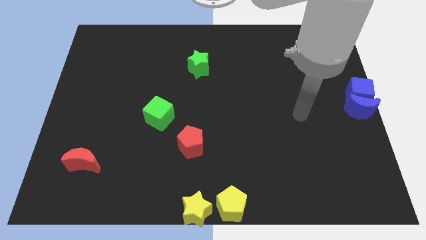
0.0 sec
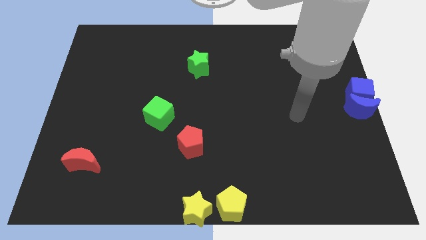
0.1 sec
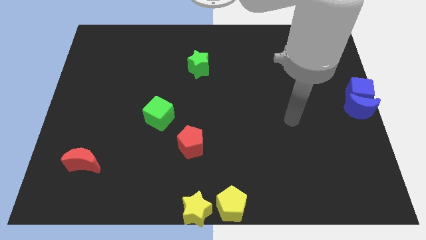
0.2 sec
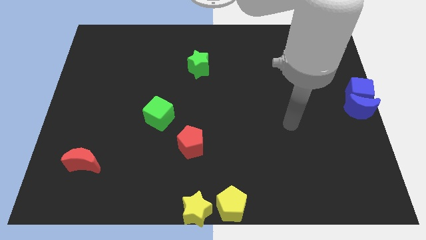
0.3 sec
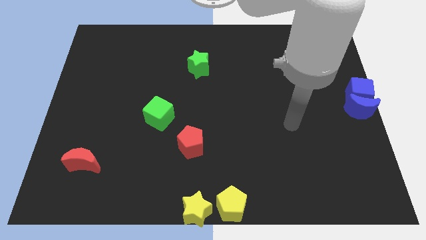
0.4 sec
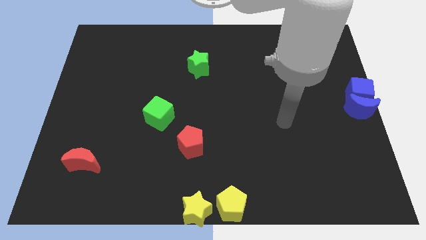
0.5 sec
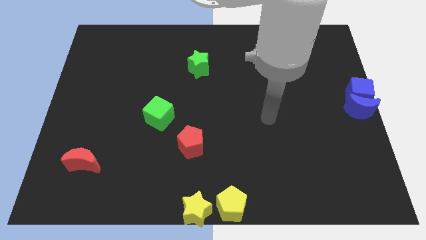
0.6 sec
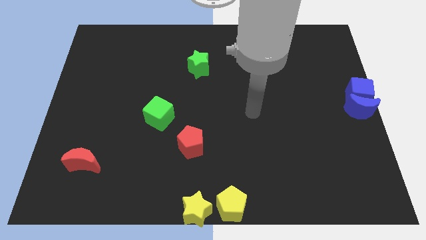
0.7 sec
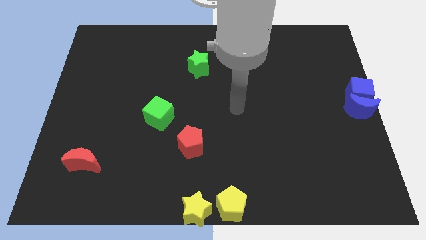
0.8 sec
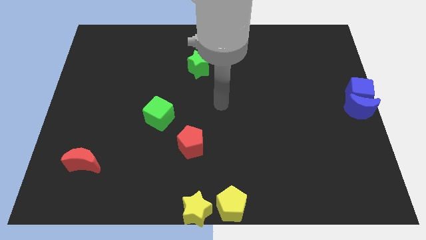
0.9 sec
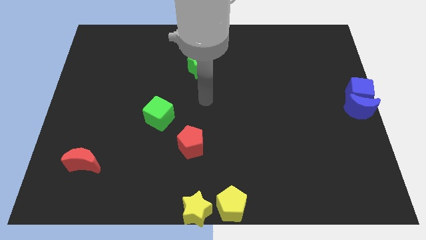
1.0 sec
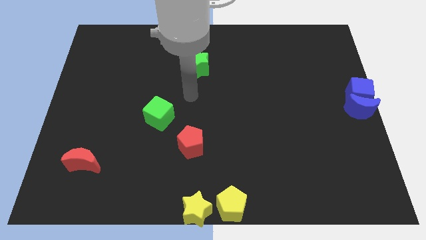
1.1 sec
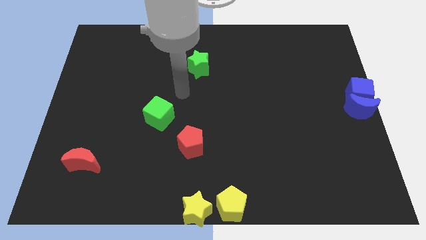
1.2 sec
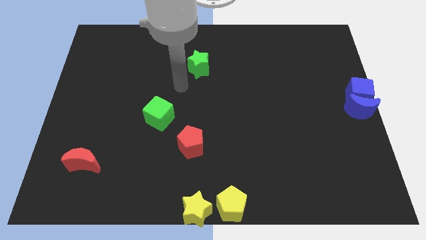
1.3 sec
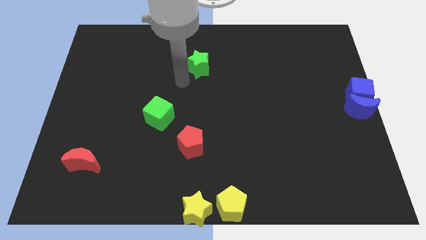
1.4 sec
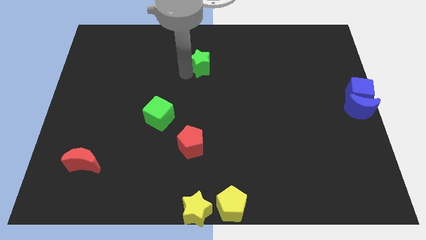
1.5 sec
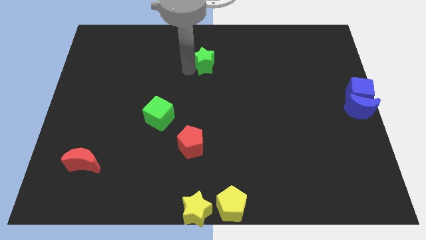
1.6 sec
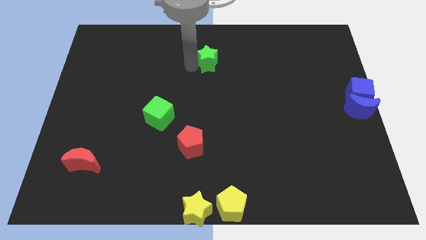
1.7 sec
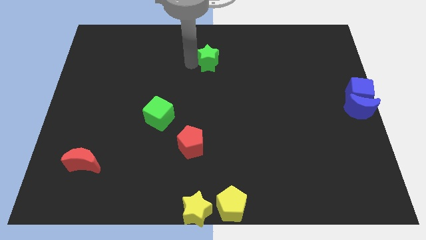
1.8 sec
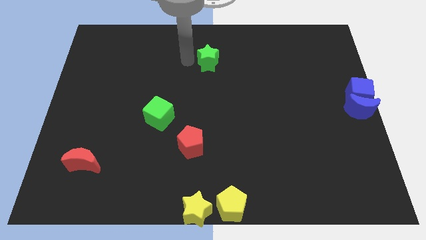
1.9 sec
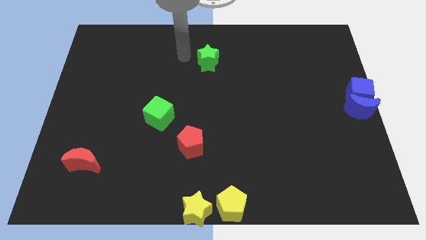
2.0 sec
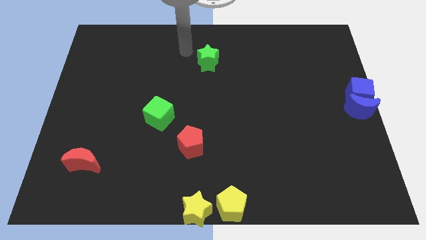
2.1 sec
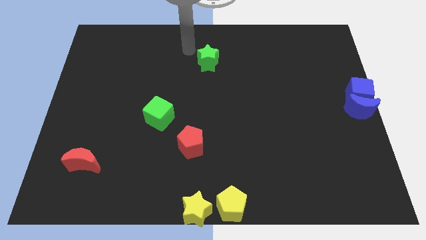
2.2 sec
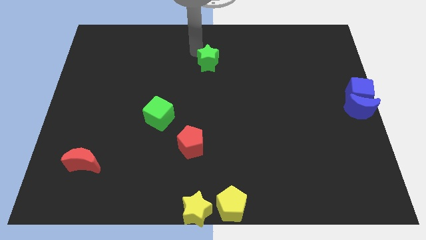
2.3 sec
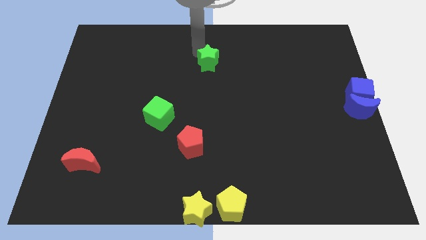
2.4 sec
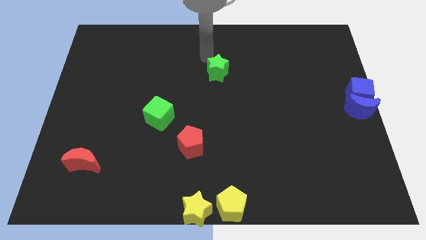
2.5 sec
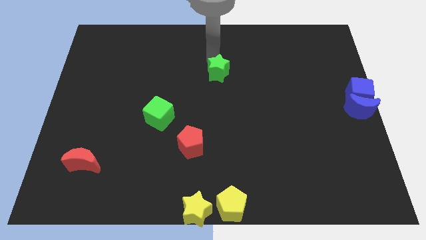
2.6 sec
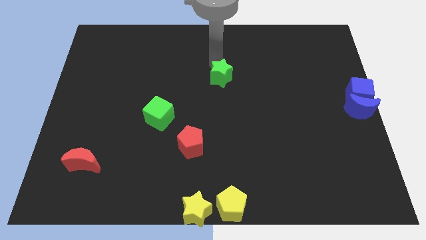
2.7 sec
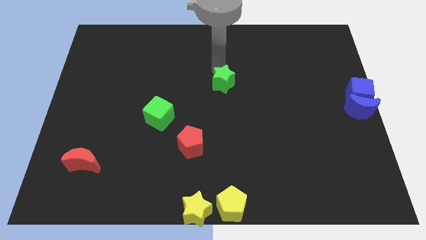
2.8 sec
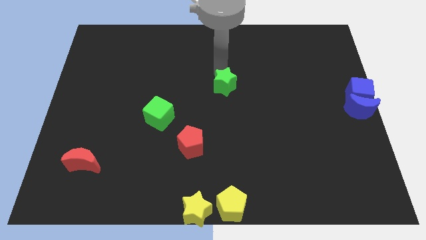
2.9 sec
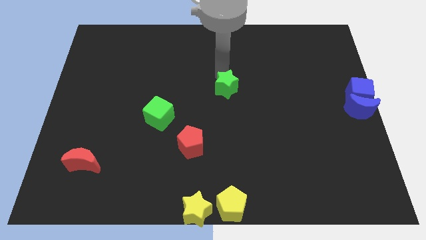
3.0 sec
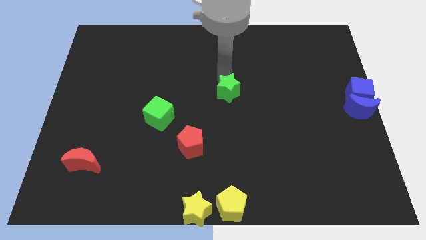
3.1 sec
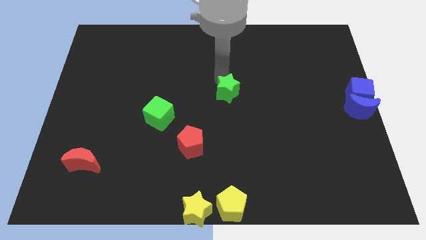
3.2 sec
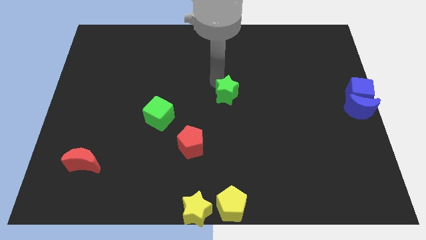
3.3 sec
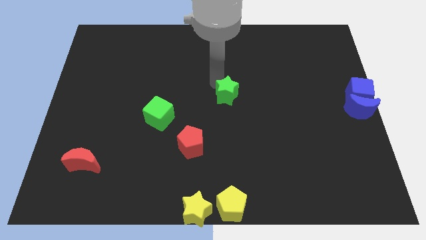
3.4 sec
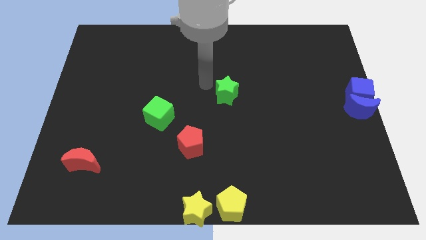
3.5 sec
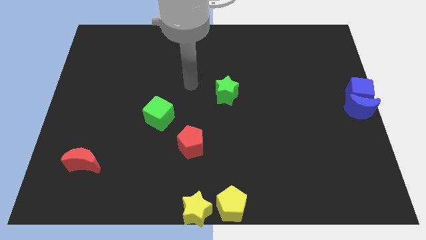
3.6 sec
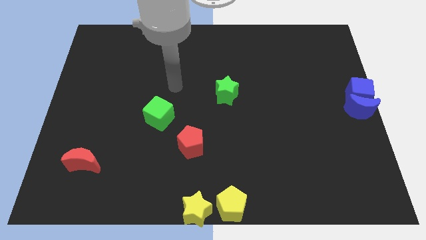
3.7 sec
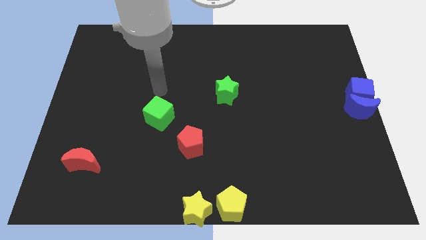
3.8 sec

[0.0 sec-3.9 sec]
move green star to the middle of board

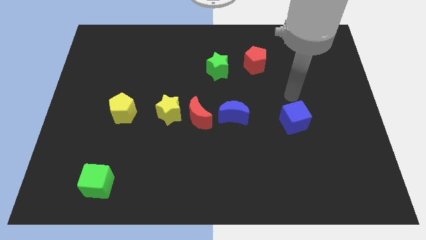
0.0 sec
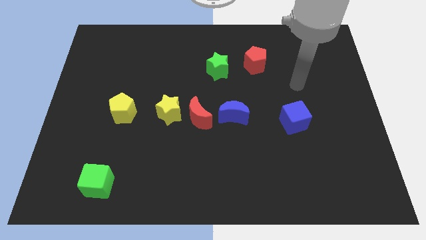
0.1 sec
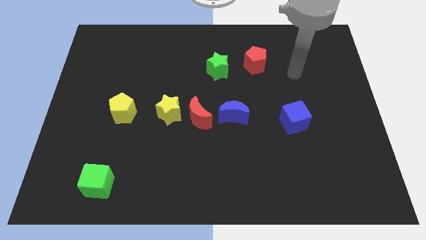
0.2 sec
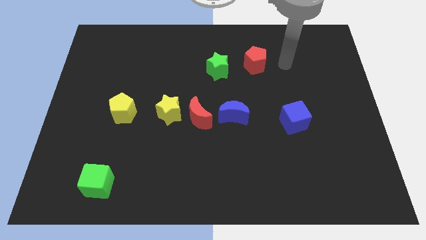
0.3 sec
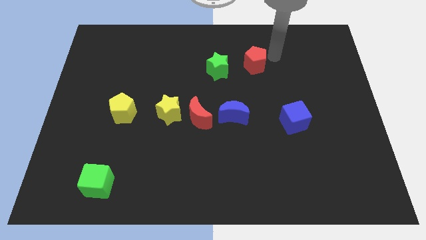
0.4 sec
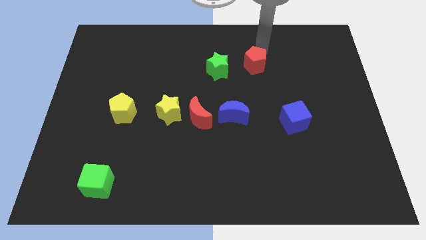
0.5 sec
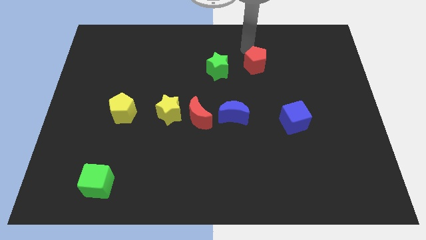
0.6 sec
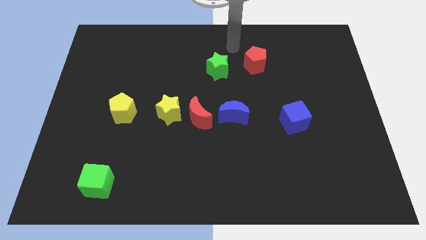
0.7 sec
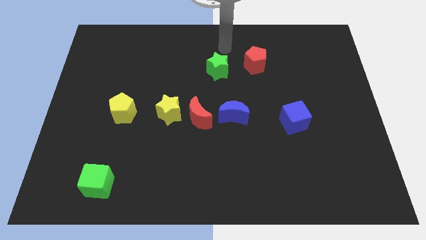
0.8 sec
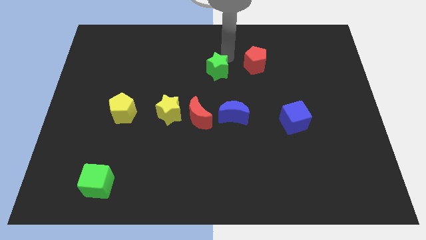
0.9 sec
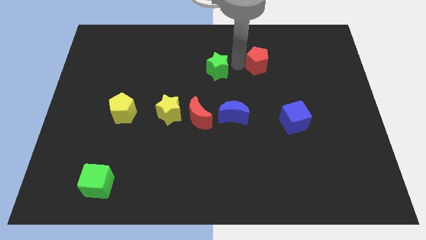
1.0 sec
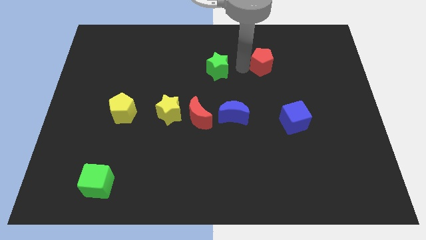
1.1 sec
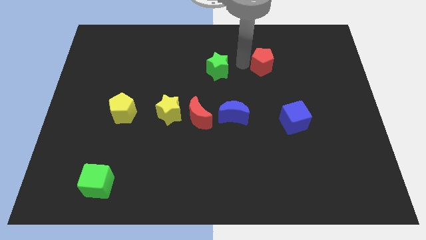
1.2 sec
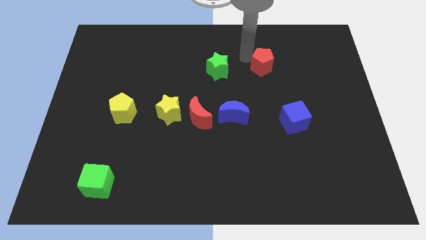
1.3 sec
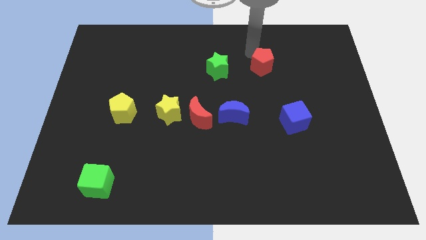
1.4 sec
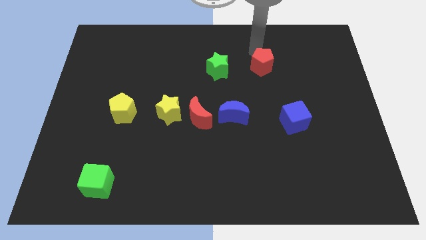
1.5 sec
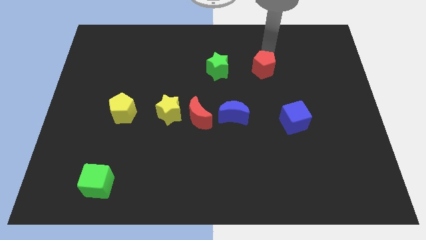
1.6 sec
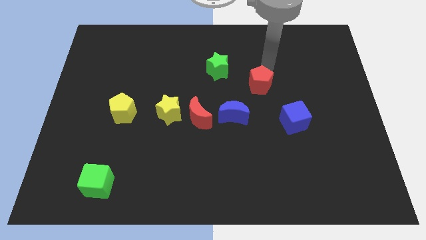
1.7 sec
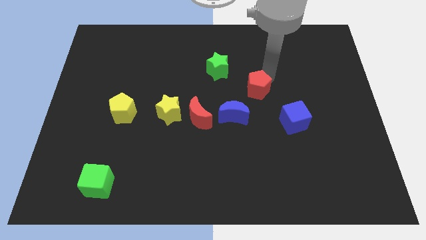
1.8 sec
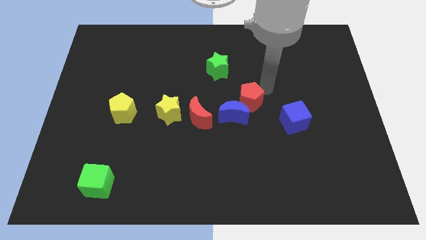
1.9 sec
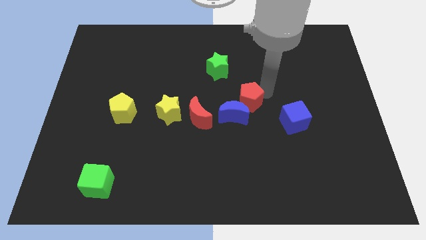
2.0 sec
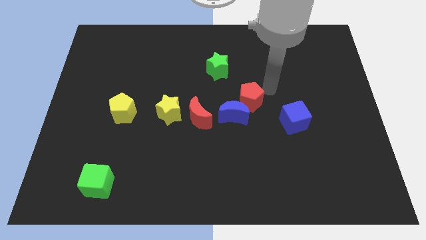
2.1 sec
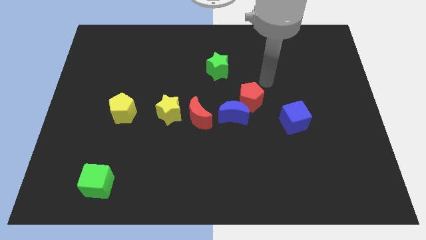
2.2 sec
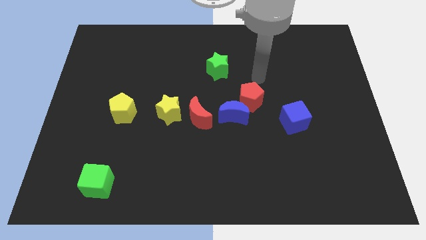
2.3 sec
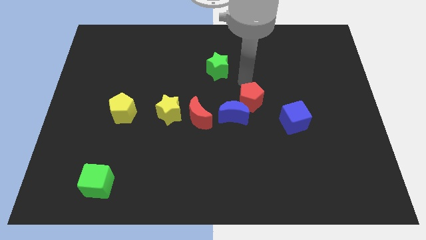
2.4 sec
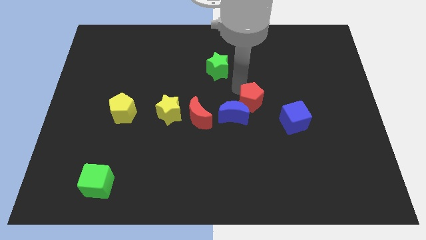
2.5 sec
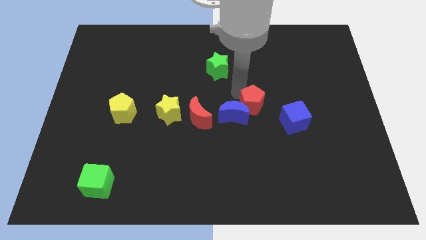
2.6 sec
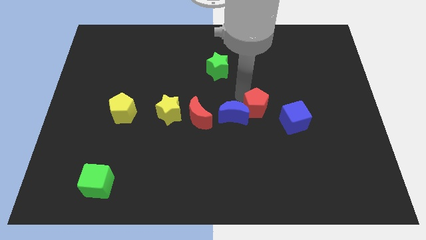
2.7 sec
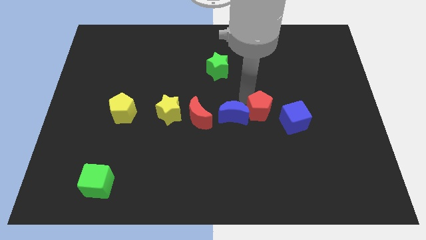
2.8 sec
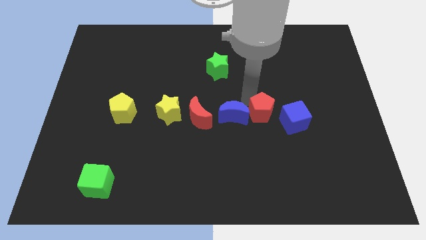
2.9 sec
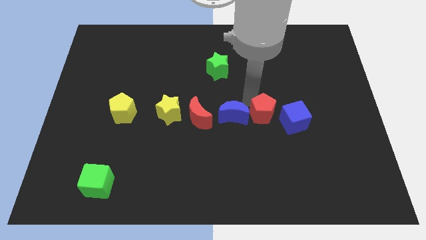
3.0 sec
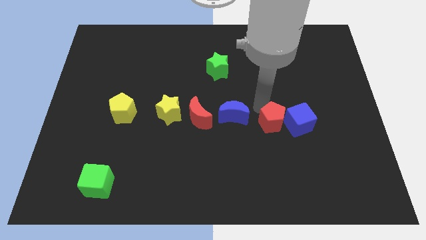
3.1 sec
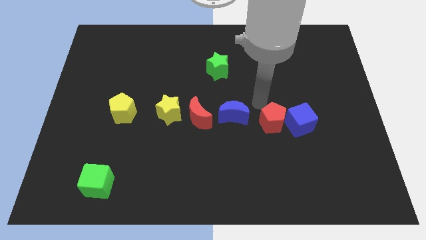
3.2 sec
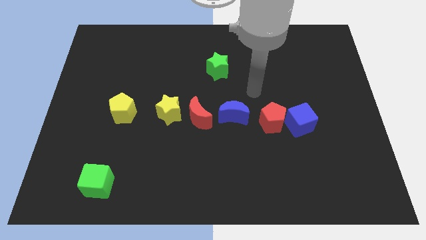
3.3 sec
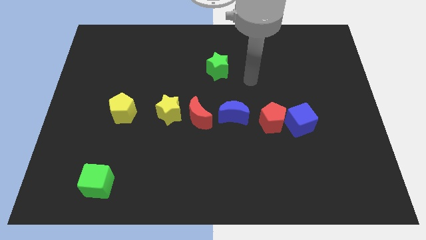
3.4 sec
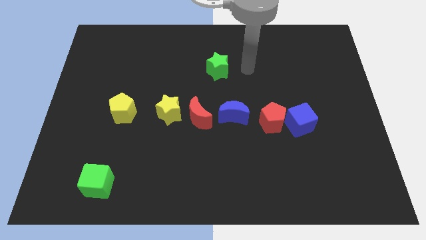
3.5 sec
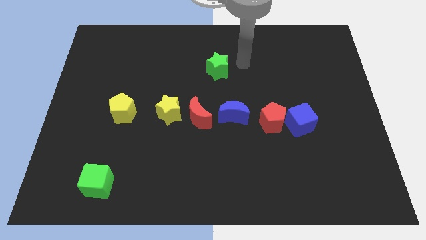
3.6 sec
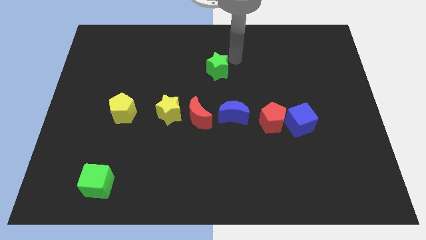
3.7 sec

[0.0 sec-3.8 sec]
put the red pentagon on the left side of the blue cube

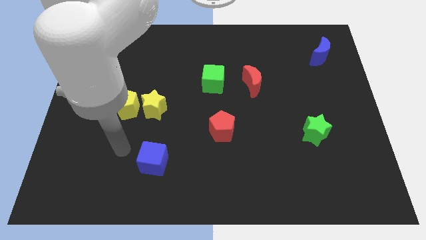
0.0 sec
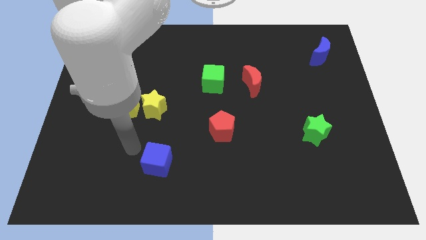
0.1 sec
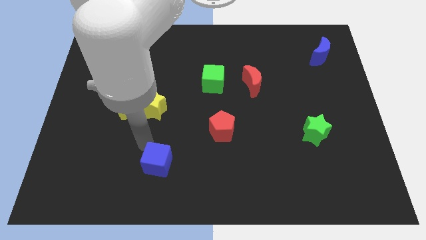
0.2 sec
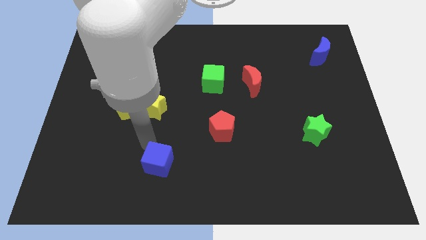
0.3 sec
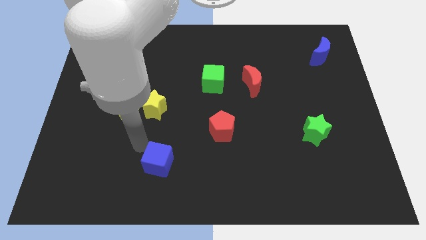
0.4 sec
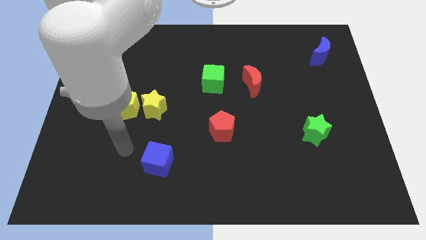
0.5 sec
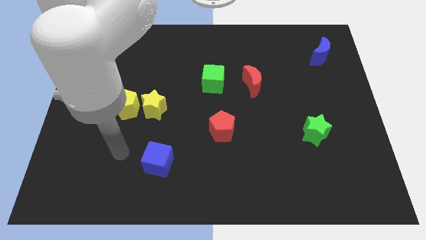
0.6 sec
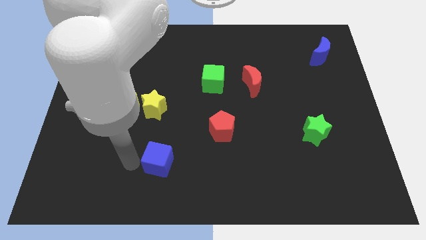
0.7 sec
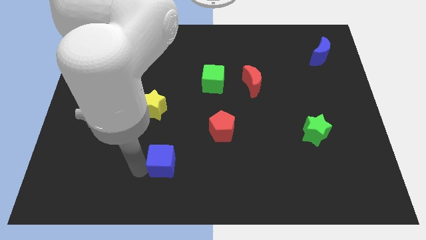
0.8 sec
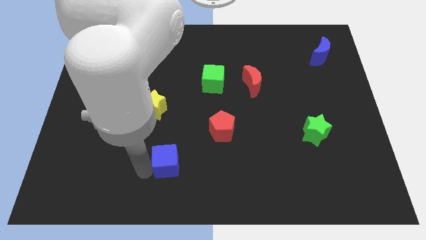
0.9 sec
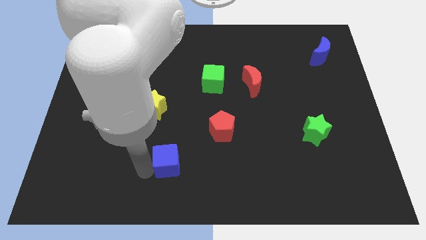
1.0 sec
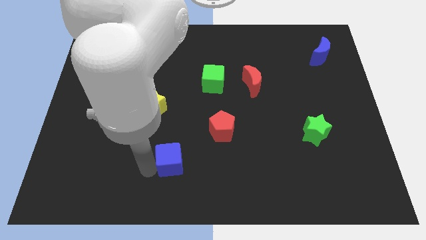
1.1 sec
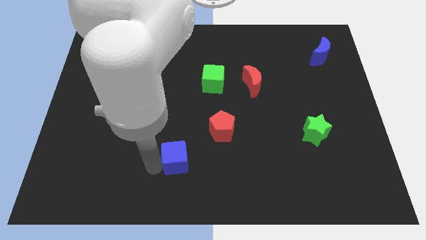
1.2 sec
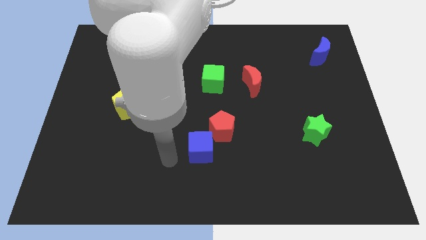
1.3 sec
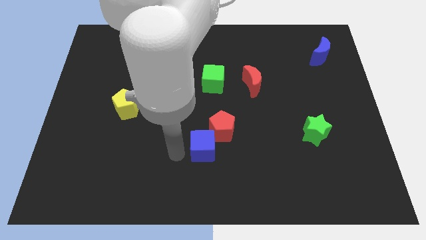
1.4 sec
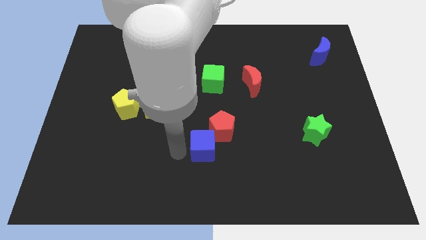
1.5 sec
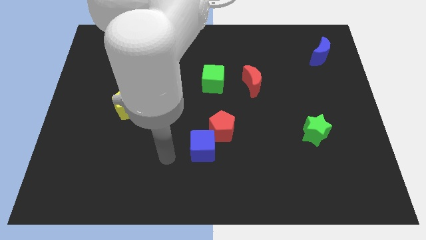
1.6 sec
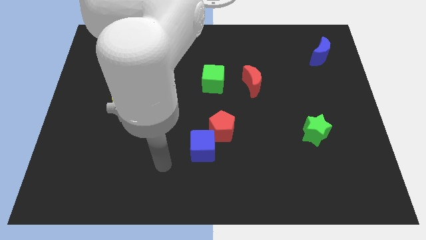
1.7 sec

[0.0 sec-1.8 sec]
push the blue cube into red pentagon
